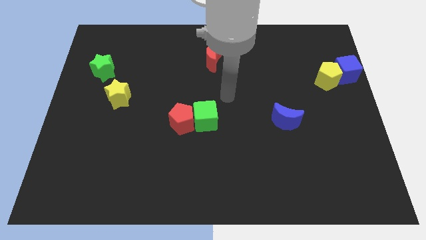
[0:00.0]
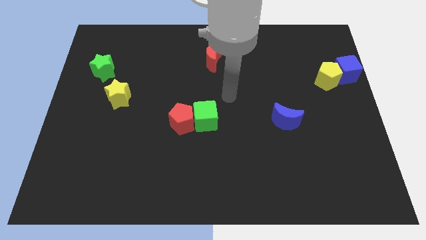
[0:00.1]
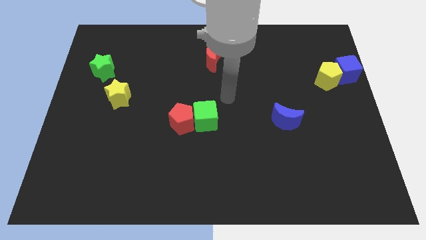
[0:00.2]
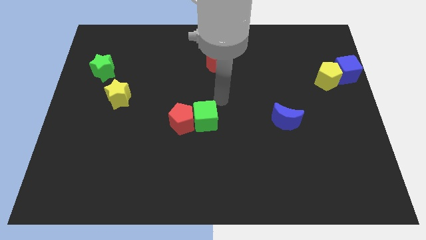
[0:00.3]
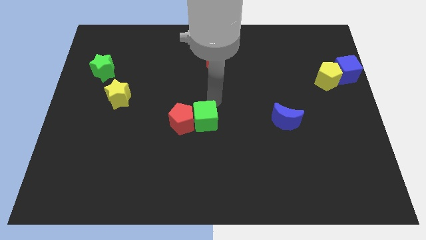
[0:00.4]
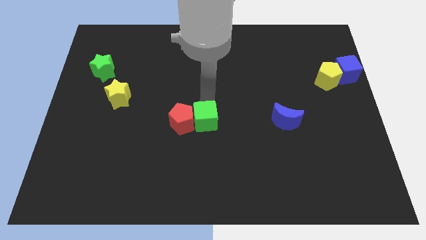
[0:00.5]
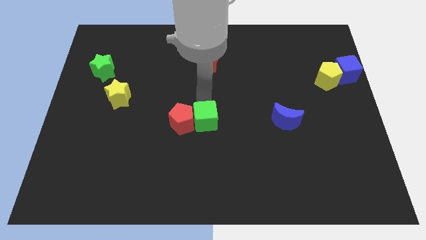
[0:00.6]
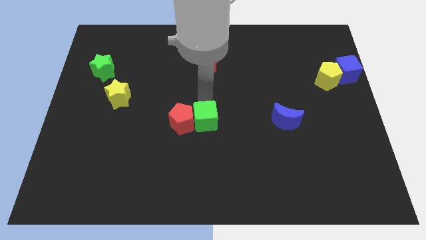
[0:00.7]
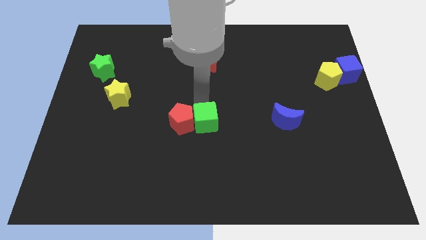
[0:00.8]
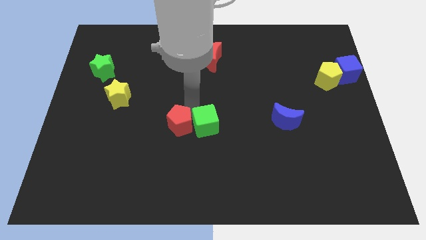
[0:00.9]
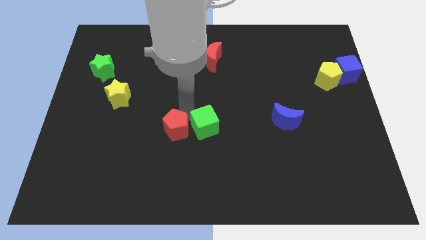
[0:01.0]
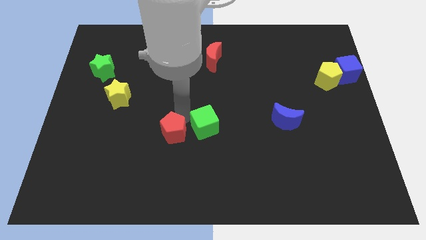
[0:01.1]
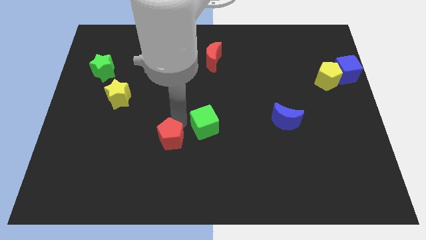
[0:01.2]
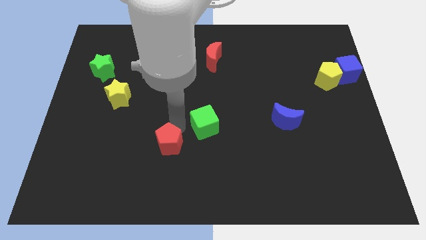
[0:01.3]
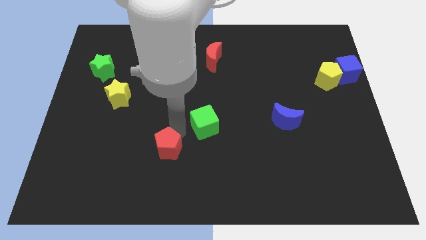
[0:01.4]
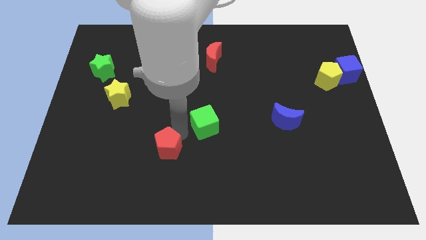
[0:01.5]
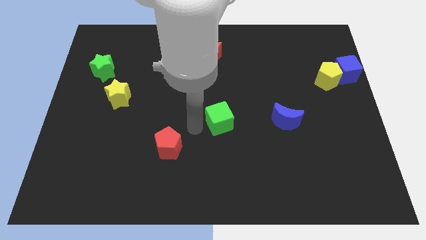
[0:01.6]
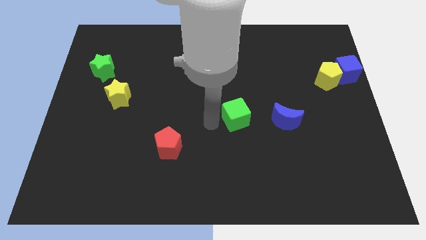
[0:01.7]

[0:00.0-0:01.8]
separate the green cube and red pentagon

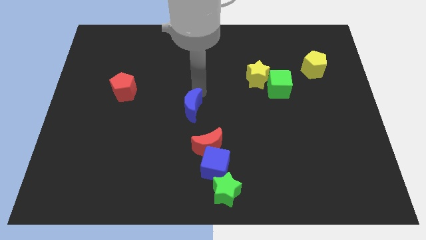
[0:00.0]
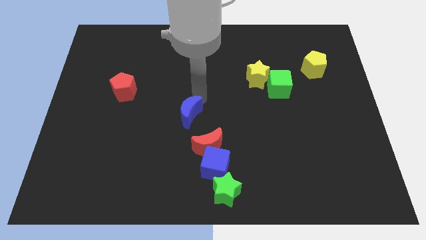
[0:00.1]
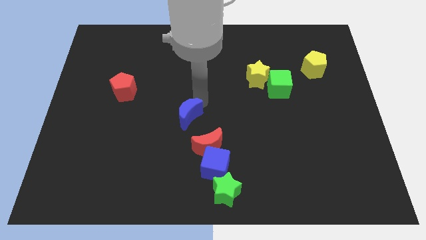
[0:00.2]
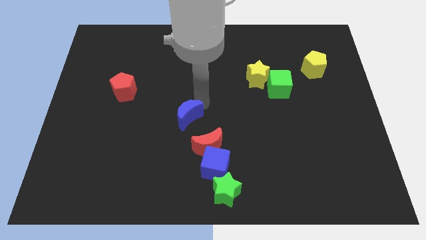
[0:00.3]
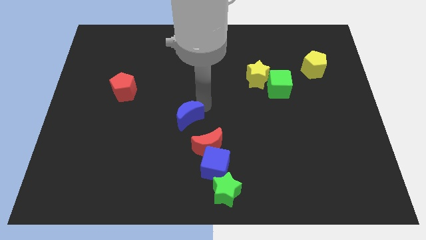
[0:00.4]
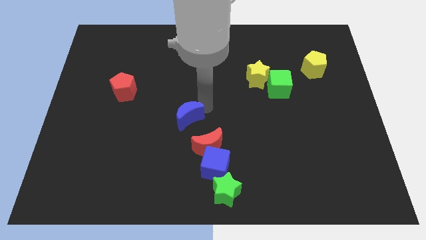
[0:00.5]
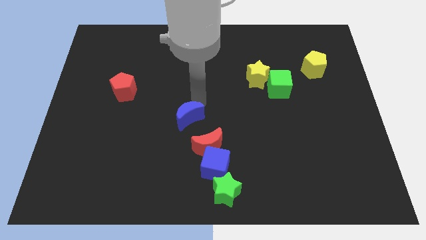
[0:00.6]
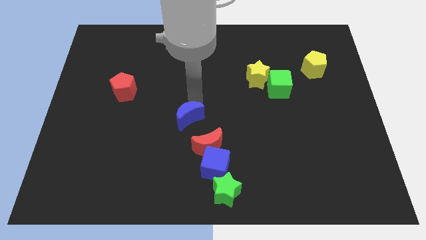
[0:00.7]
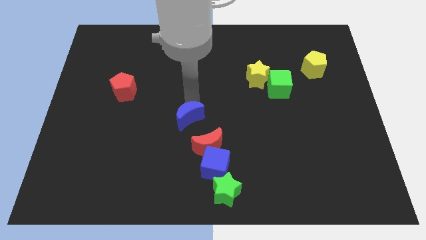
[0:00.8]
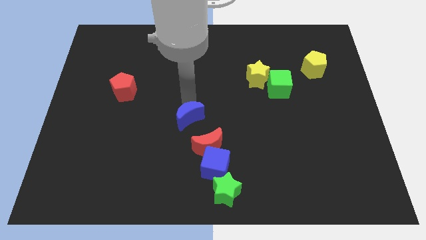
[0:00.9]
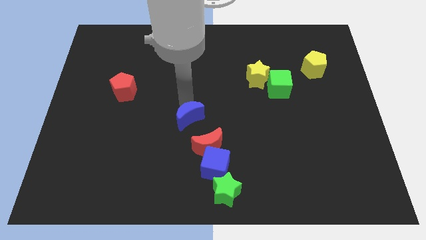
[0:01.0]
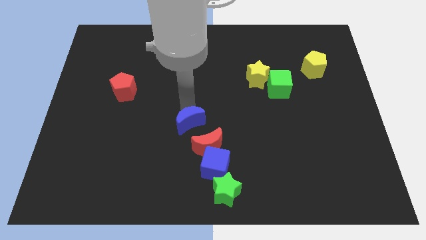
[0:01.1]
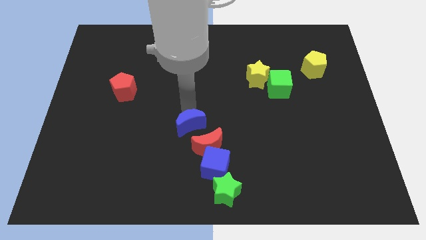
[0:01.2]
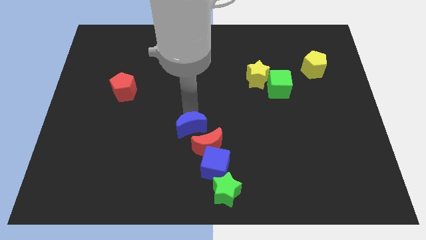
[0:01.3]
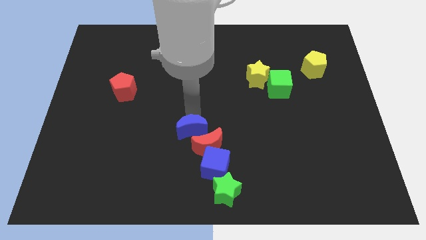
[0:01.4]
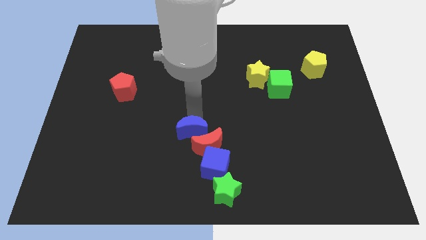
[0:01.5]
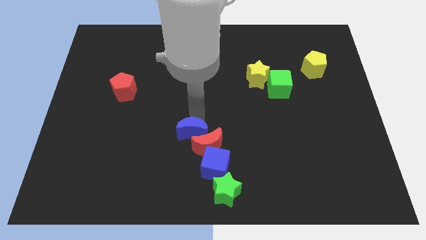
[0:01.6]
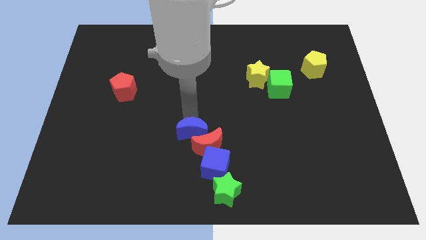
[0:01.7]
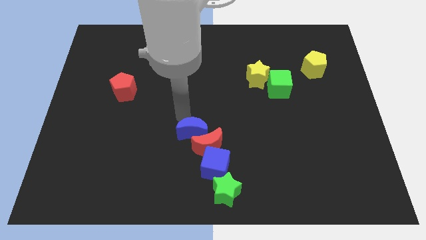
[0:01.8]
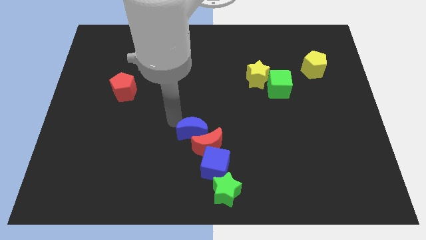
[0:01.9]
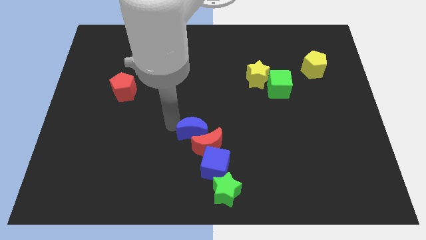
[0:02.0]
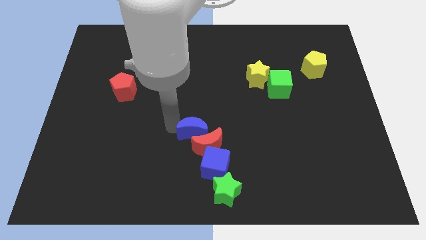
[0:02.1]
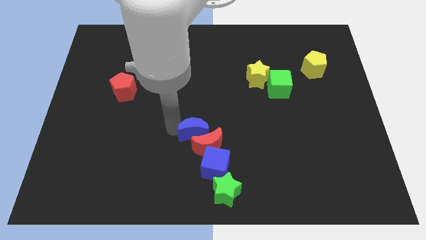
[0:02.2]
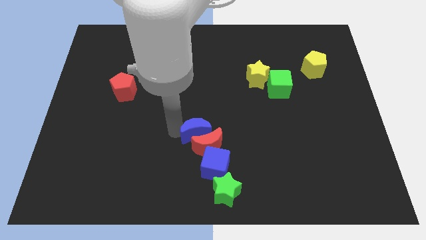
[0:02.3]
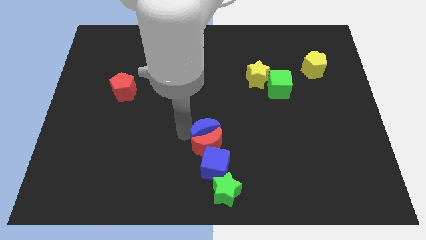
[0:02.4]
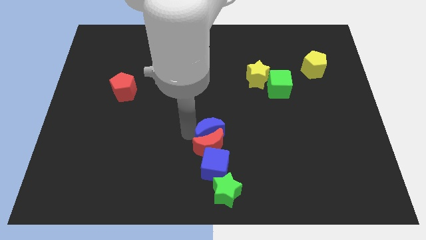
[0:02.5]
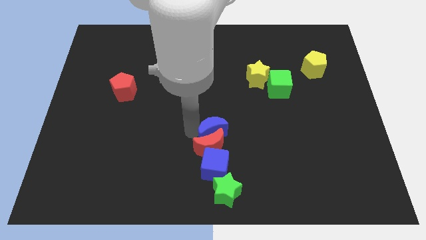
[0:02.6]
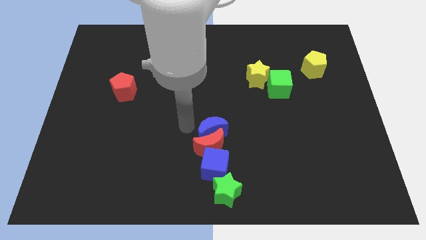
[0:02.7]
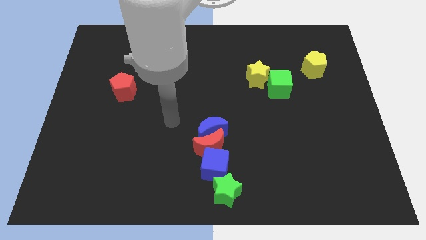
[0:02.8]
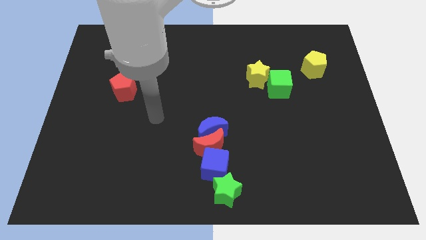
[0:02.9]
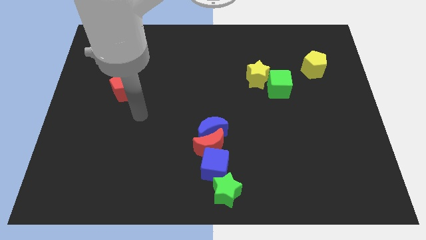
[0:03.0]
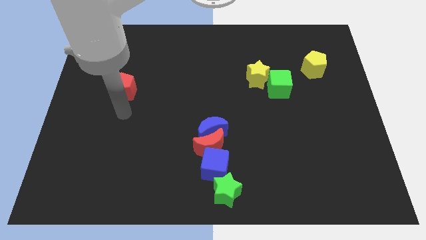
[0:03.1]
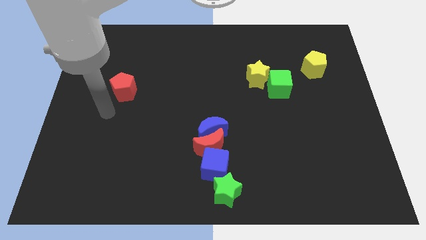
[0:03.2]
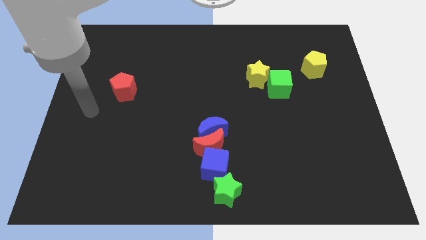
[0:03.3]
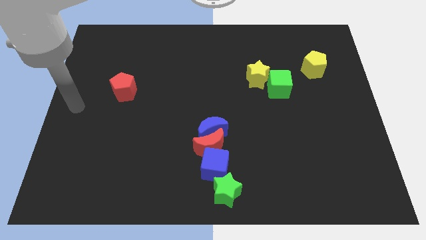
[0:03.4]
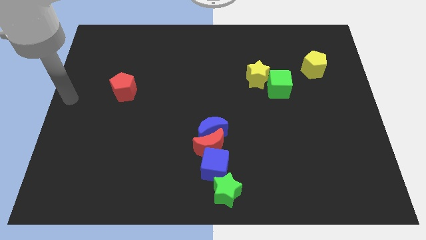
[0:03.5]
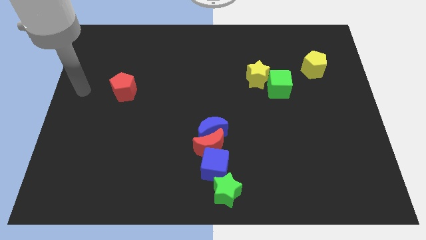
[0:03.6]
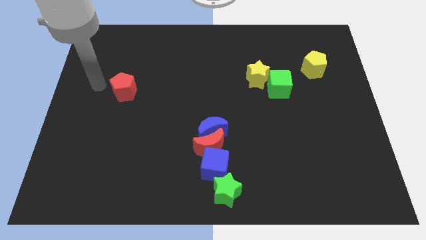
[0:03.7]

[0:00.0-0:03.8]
push the blue crescent into the red crescent

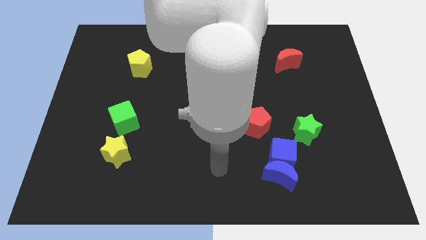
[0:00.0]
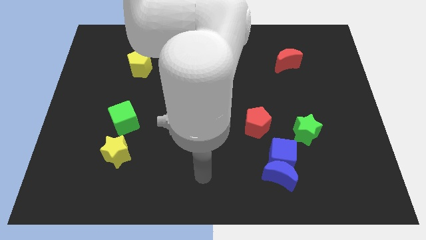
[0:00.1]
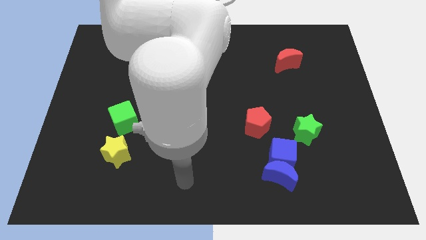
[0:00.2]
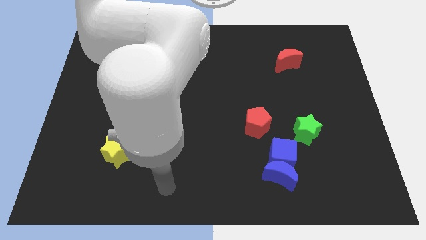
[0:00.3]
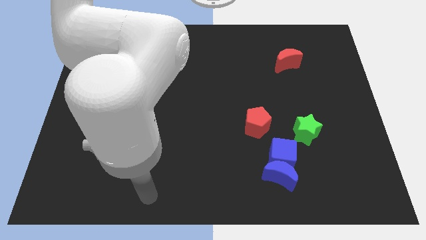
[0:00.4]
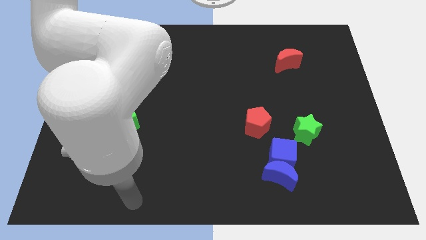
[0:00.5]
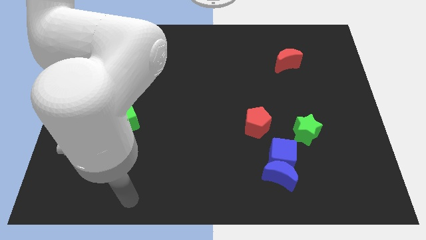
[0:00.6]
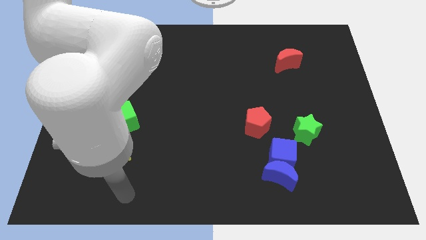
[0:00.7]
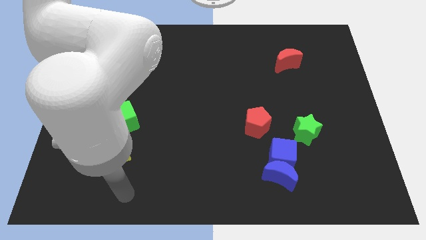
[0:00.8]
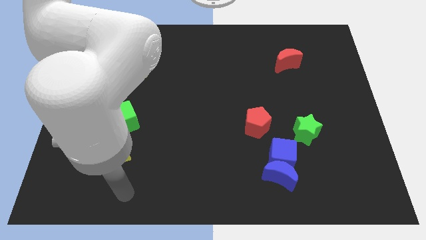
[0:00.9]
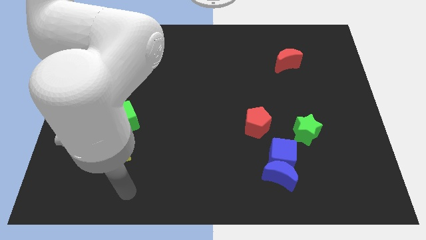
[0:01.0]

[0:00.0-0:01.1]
move your arm to the bottom side of the yellow star

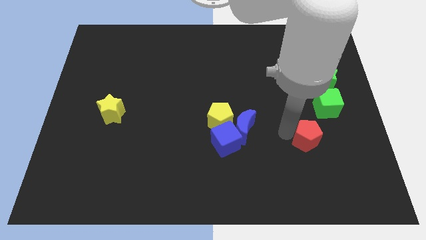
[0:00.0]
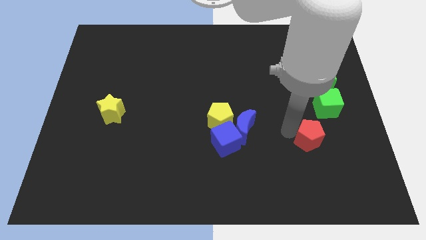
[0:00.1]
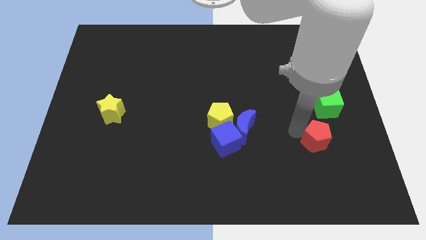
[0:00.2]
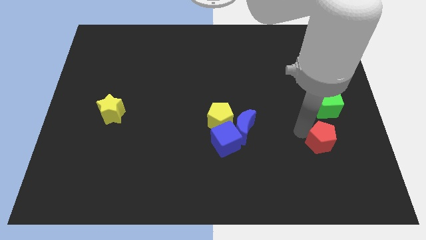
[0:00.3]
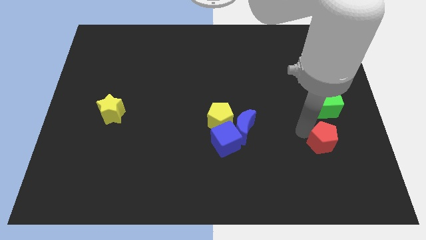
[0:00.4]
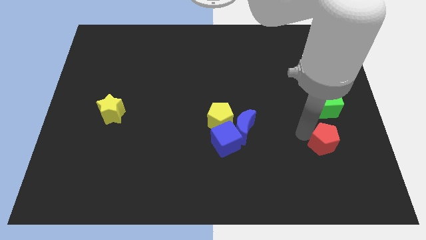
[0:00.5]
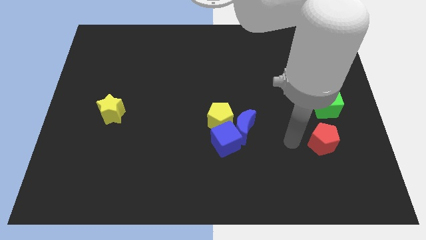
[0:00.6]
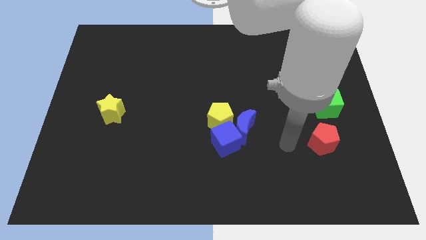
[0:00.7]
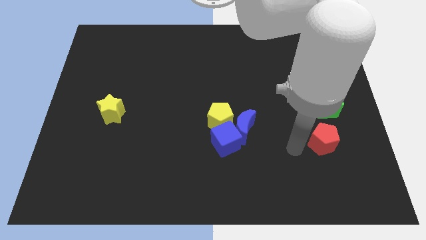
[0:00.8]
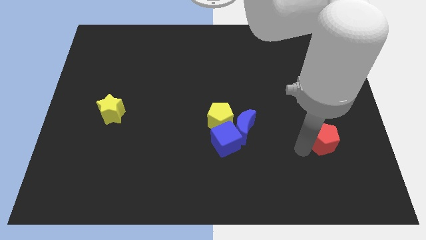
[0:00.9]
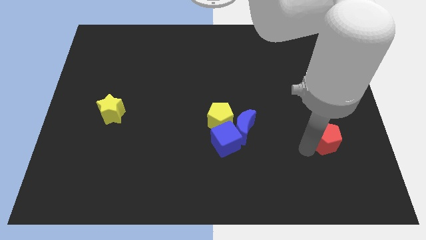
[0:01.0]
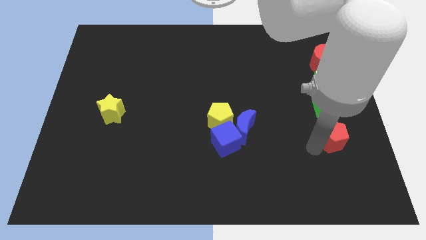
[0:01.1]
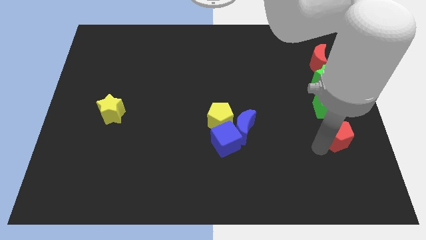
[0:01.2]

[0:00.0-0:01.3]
place the red pentagon below the green cube

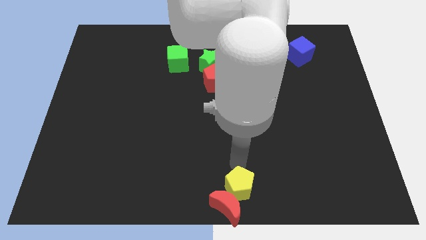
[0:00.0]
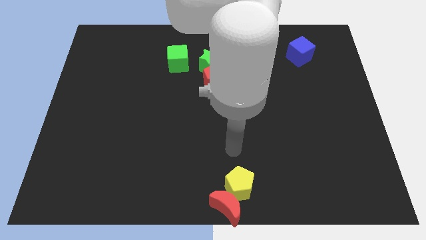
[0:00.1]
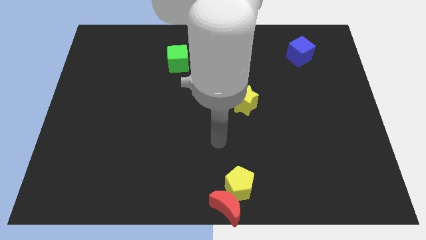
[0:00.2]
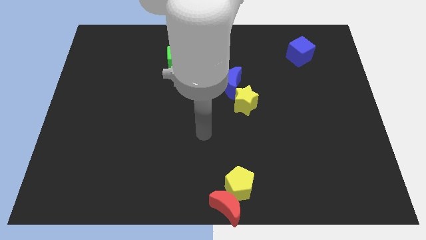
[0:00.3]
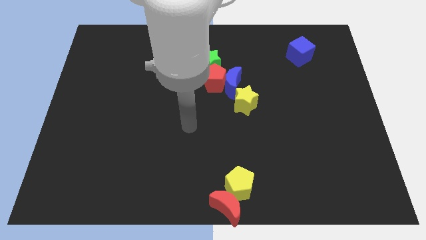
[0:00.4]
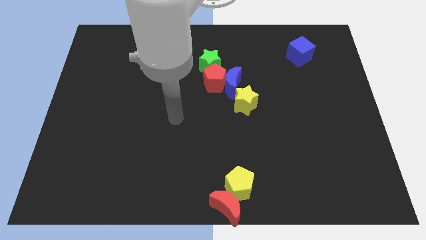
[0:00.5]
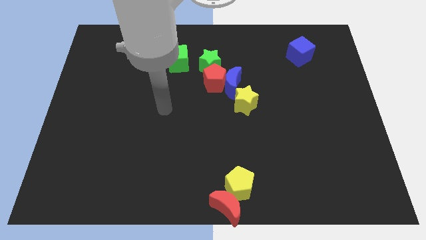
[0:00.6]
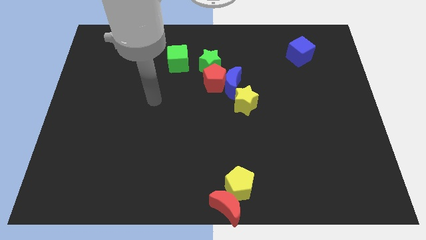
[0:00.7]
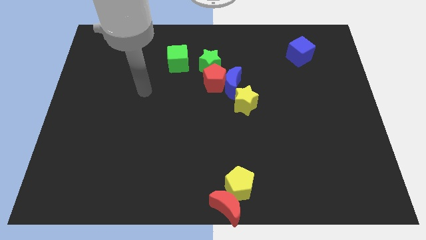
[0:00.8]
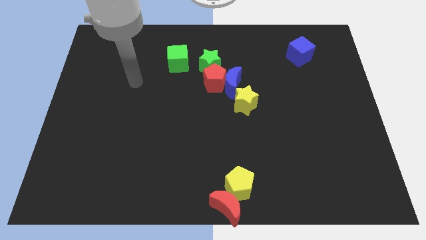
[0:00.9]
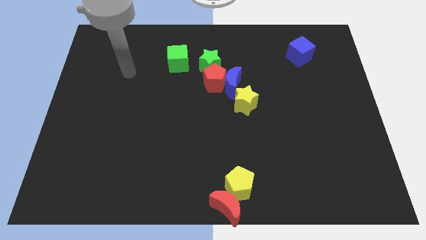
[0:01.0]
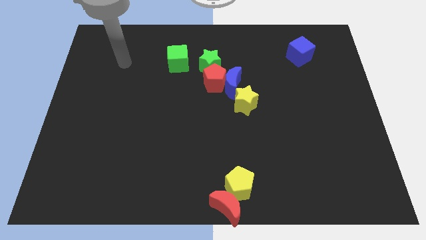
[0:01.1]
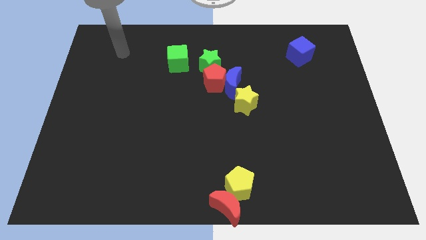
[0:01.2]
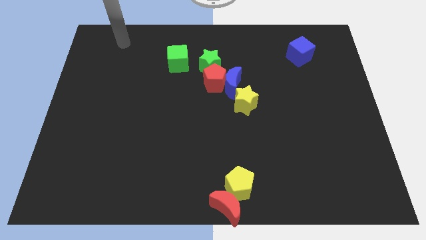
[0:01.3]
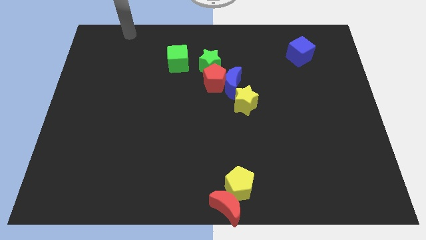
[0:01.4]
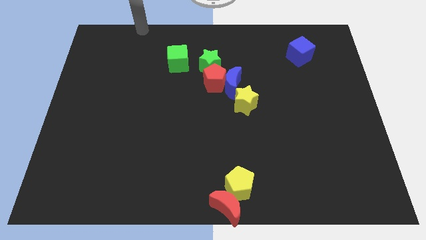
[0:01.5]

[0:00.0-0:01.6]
move your arm towards the top side of the board
